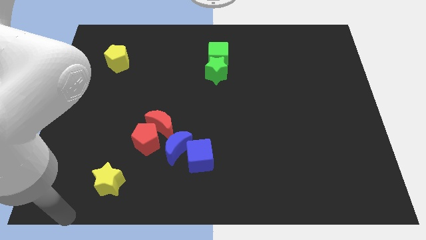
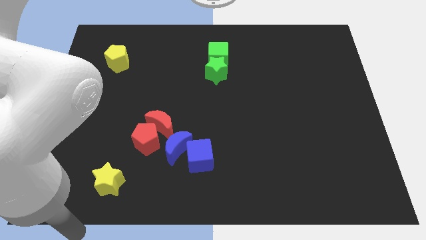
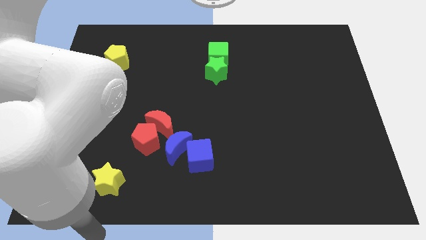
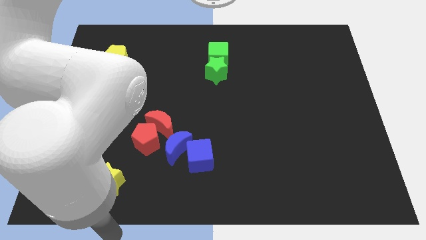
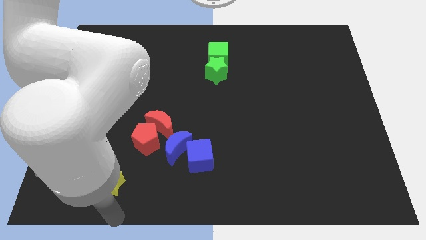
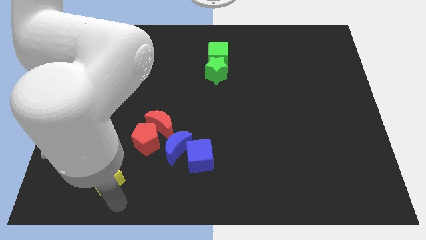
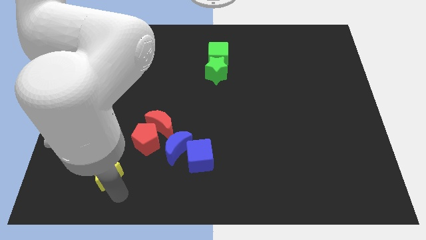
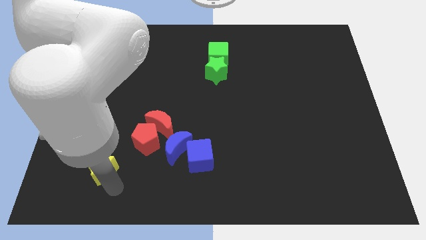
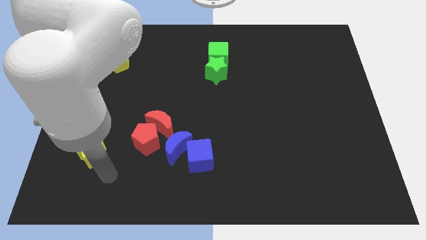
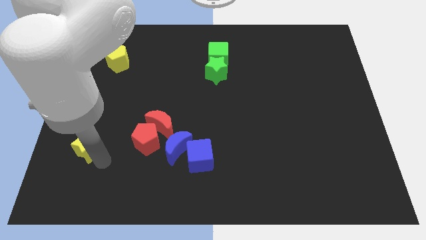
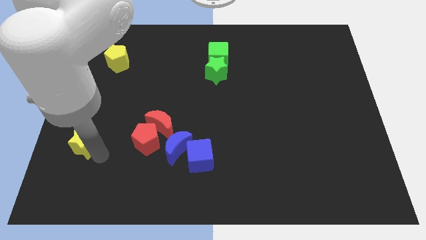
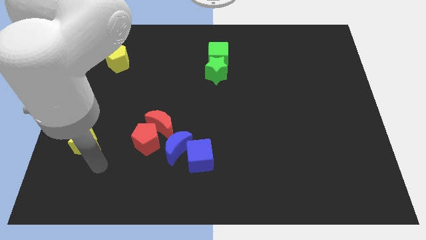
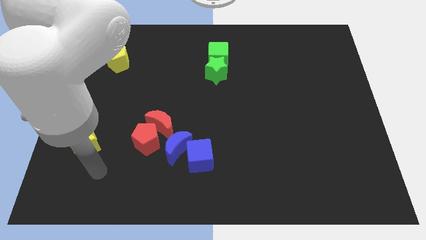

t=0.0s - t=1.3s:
push the yellow star to the left of the red pentagon

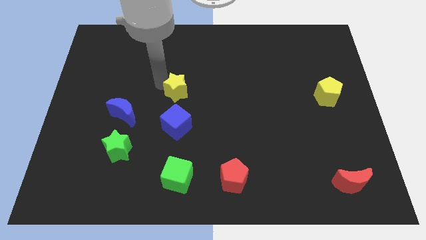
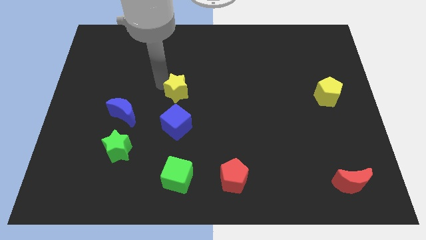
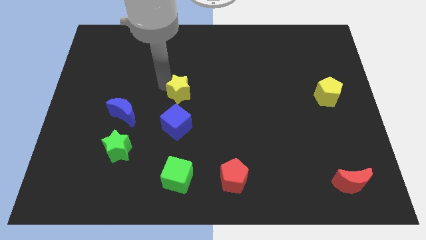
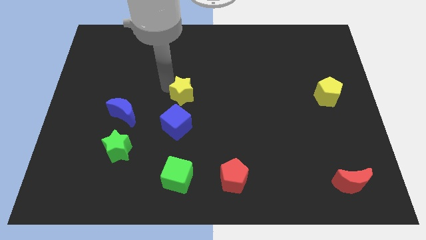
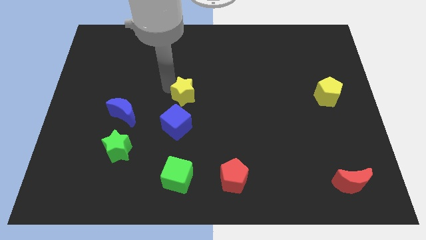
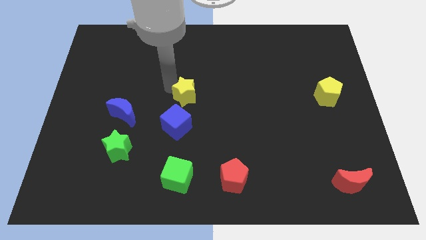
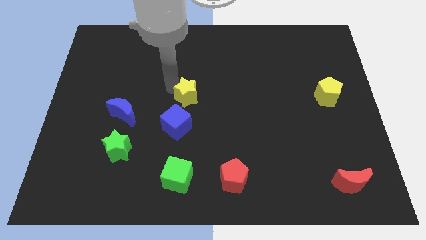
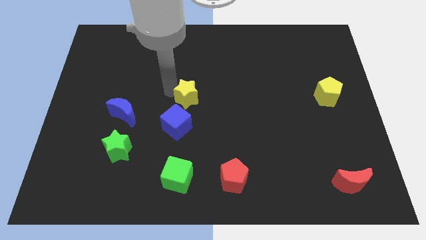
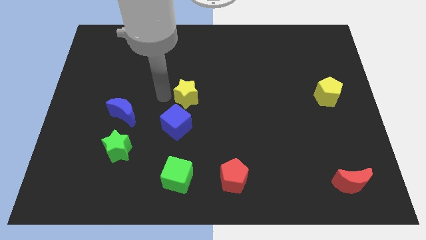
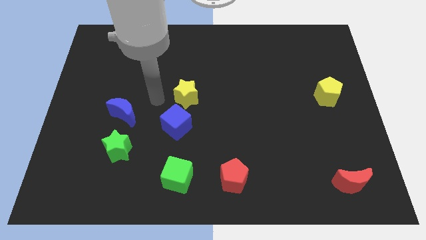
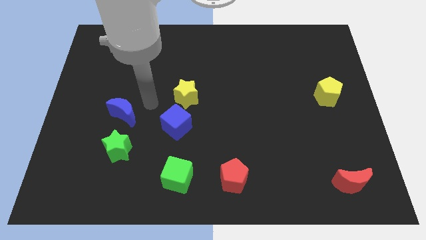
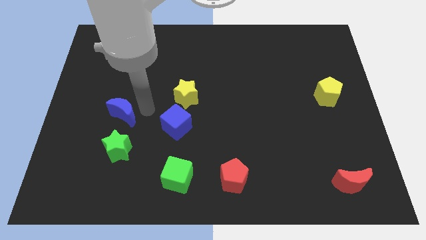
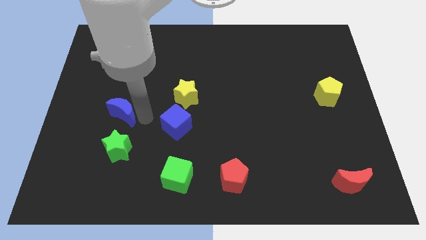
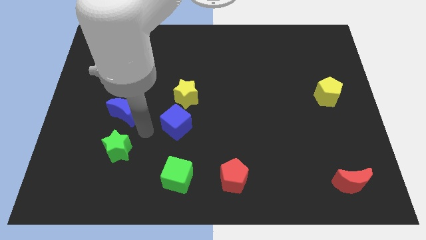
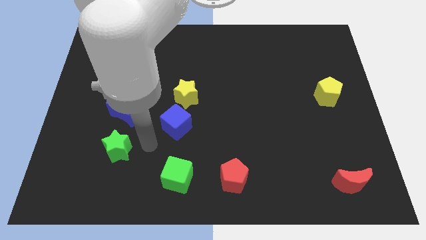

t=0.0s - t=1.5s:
push the yellow star to the top right side of the blue cube

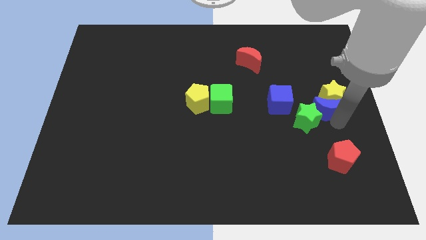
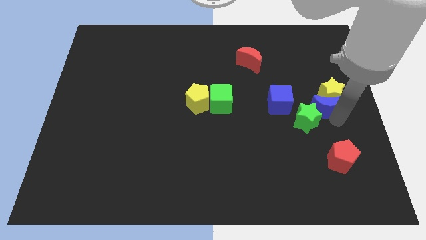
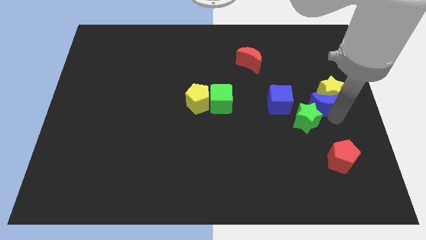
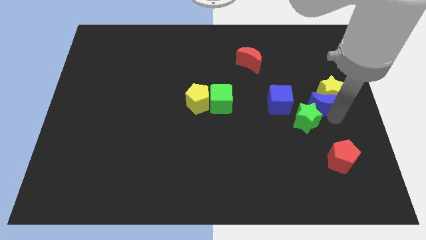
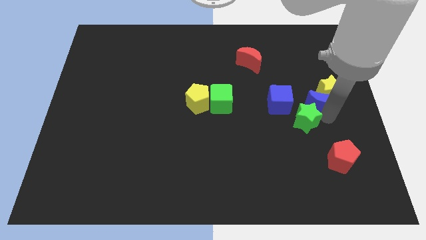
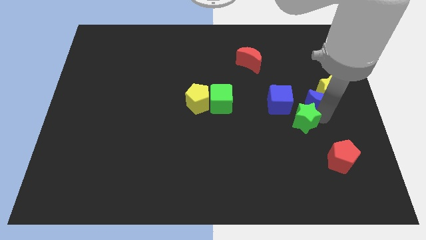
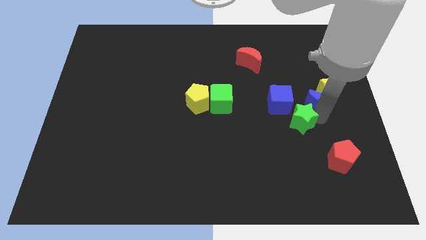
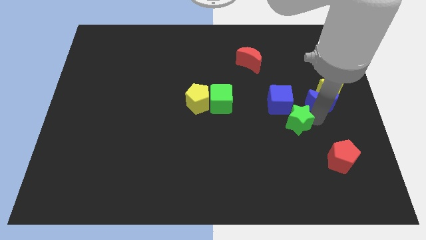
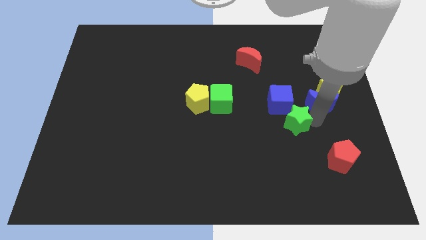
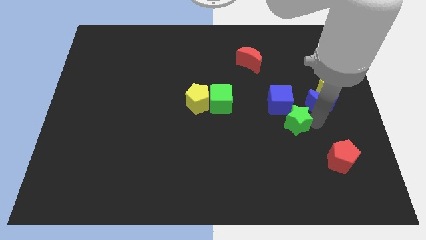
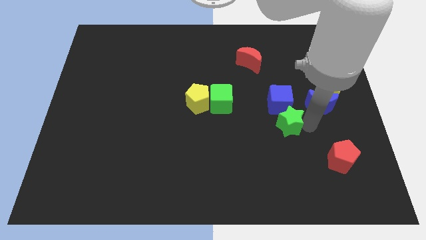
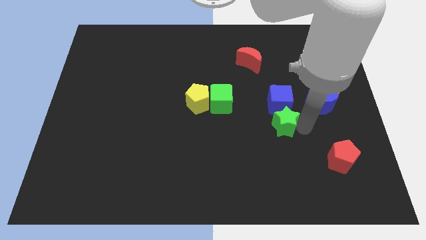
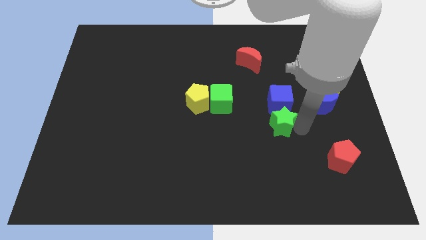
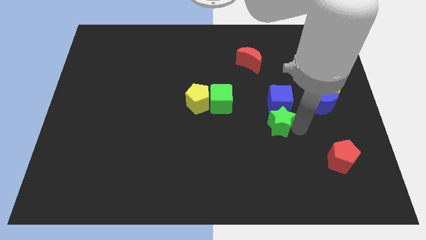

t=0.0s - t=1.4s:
push green star below to the blue cube

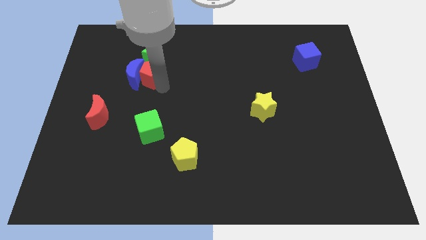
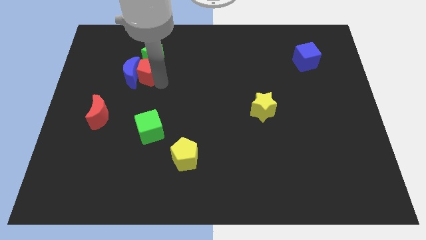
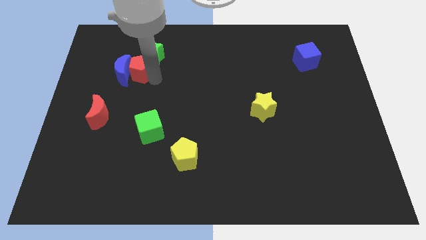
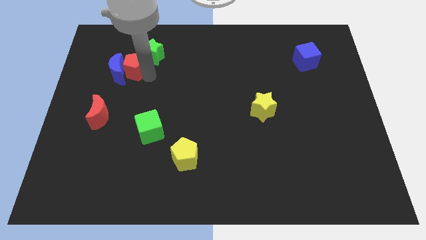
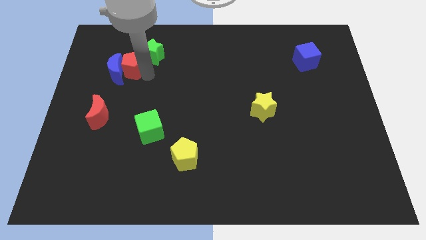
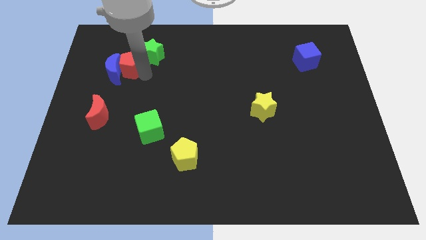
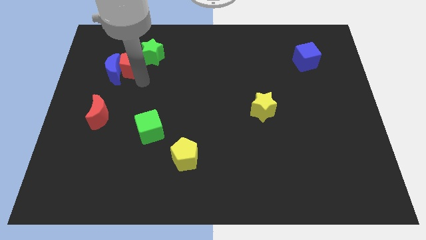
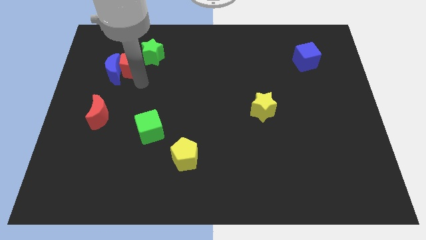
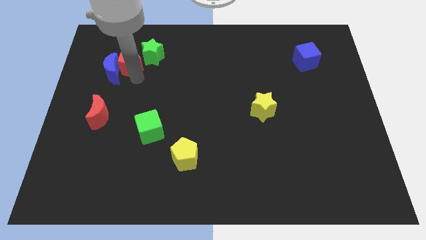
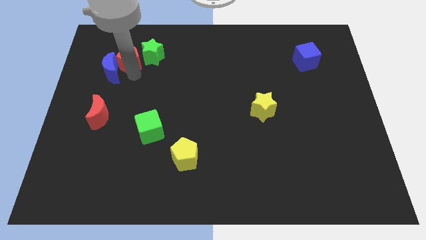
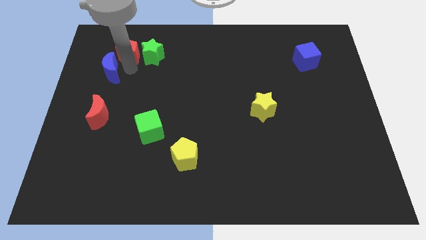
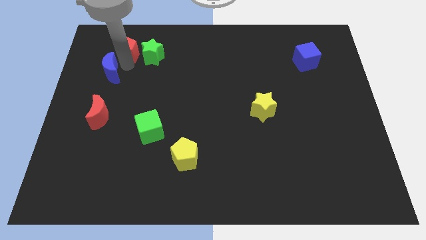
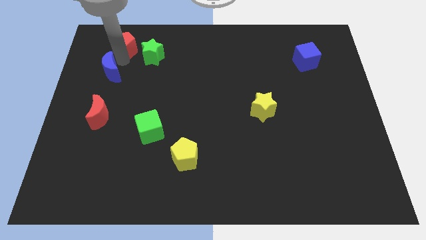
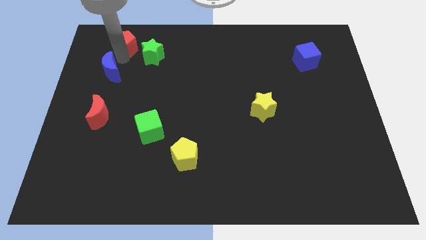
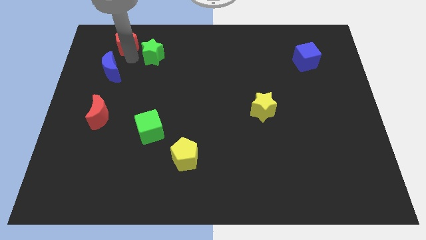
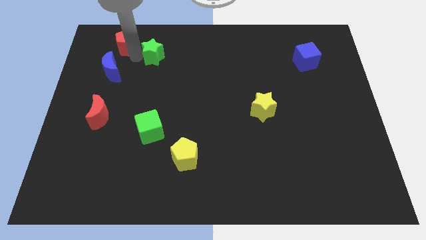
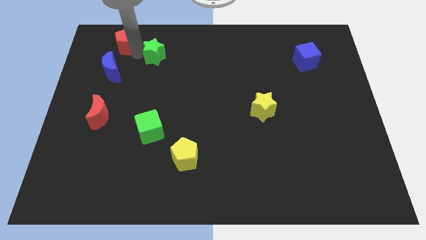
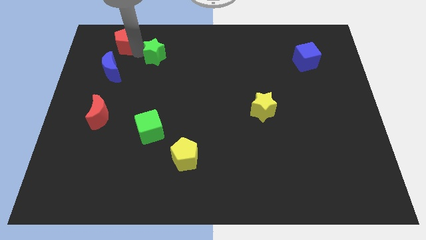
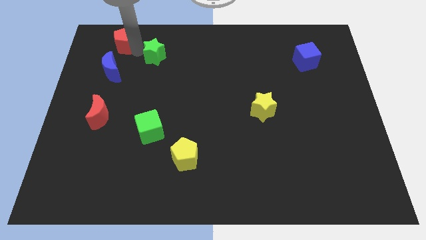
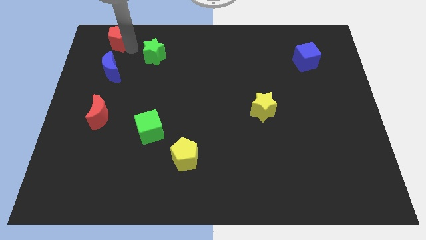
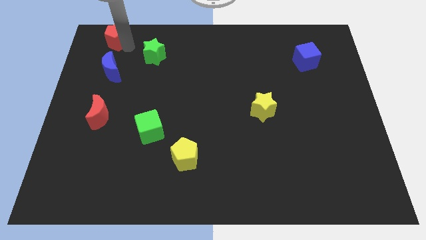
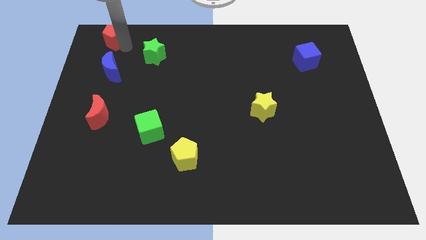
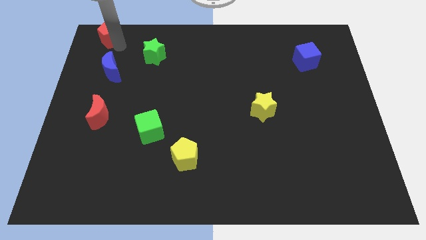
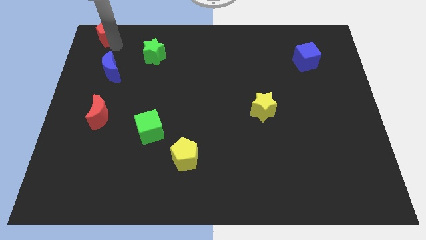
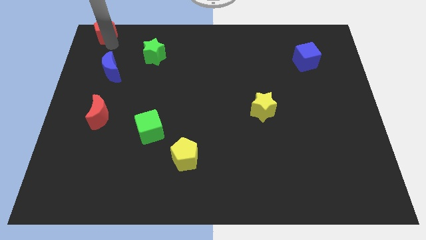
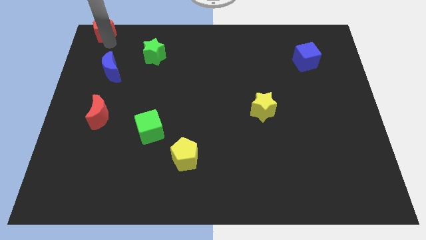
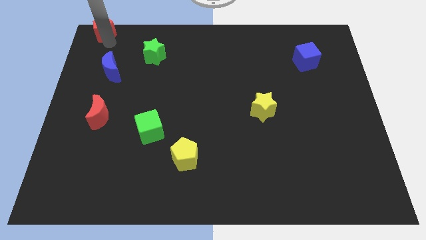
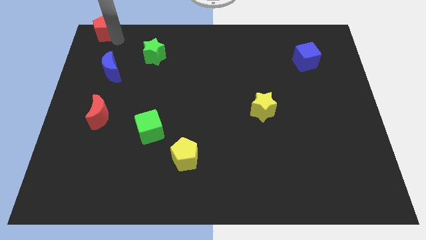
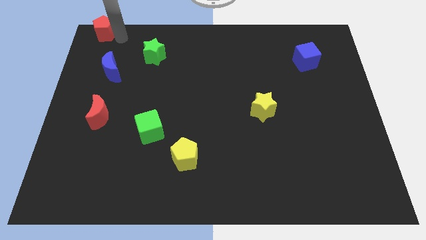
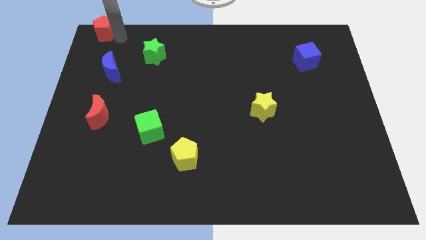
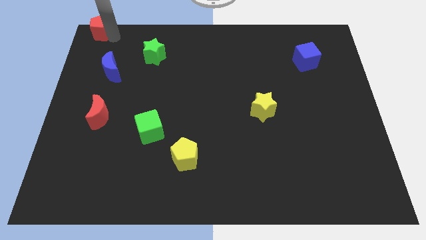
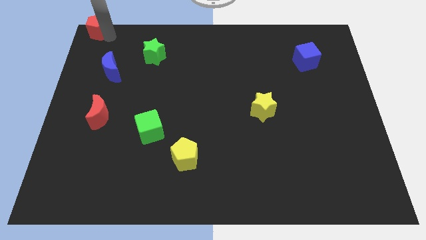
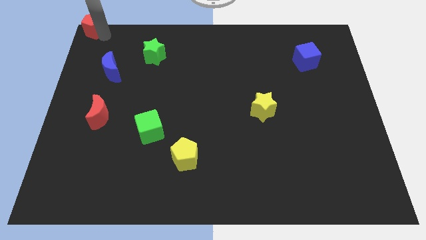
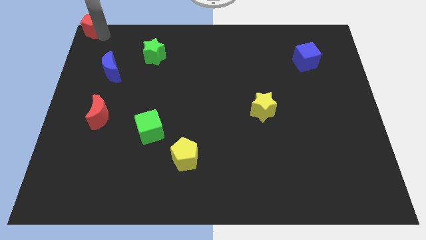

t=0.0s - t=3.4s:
move the red pentagon to the top left corner of the board

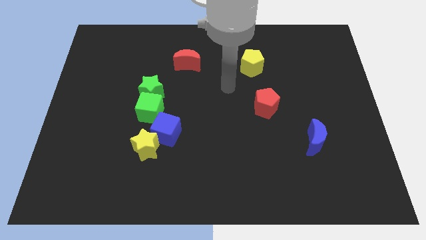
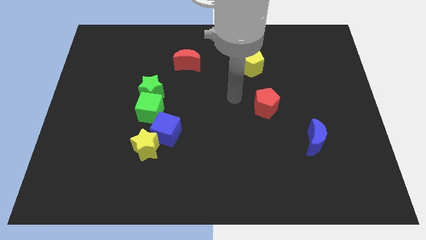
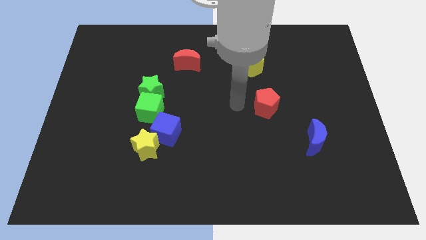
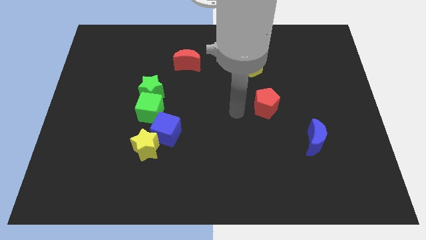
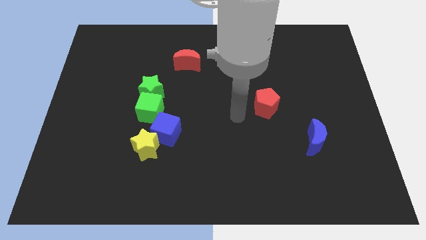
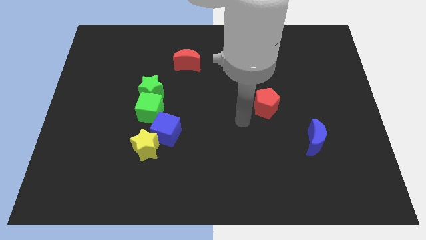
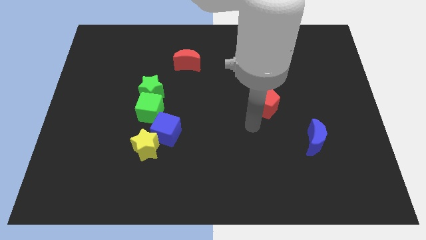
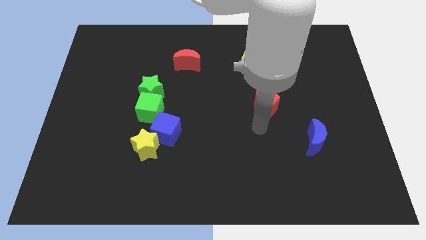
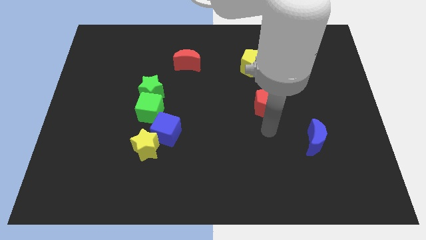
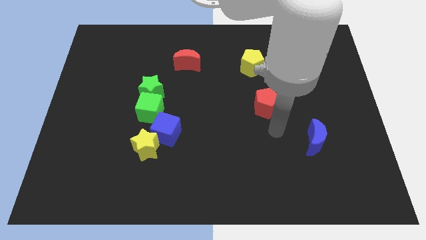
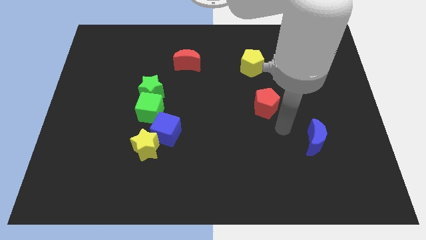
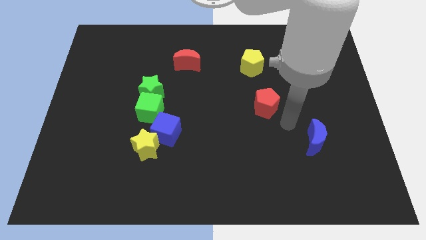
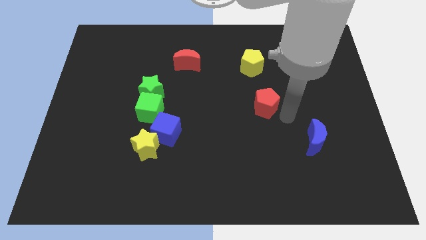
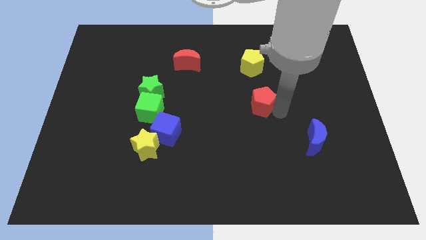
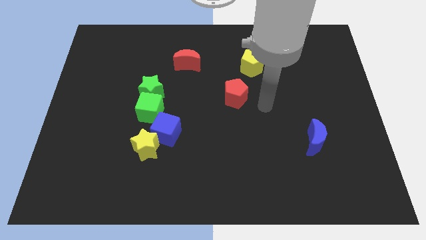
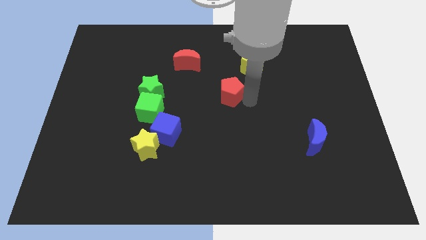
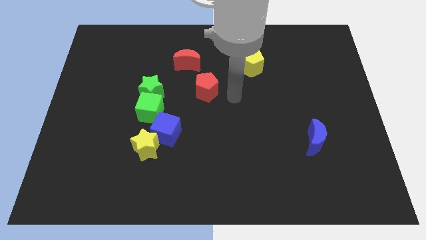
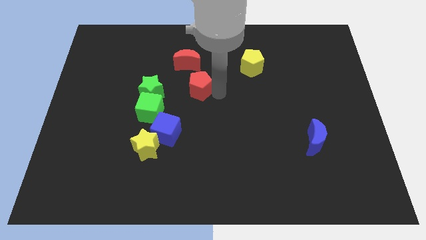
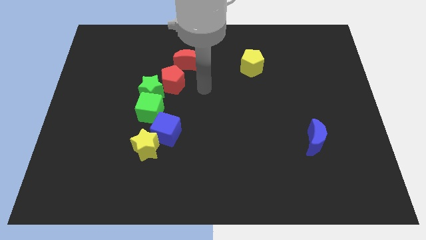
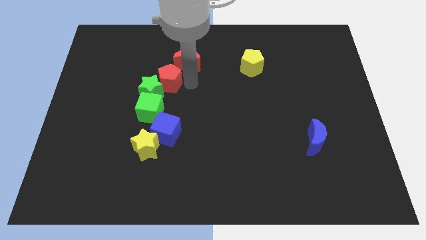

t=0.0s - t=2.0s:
push the red pentagon into the green star
